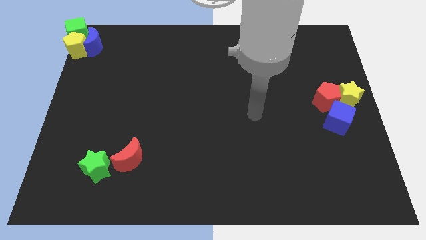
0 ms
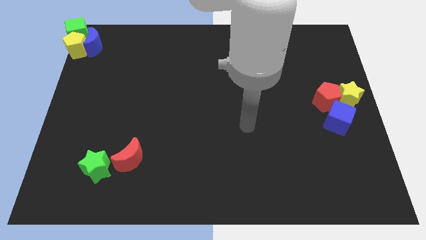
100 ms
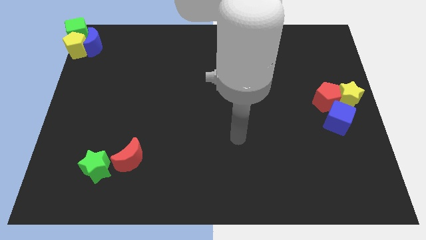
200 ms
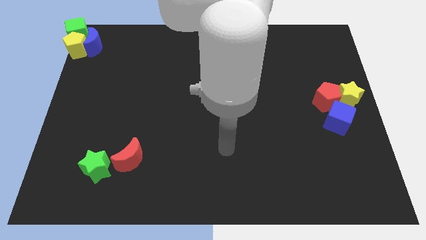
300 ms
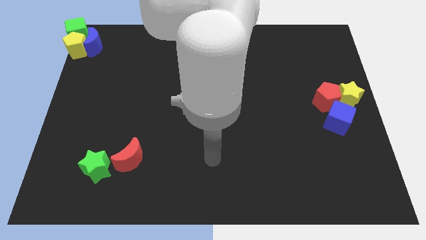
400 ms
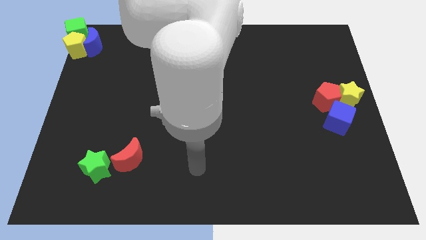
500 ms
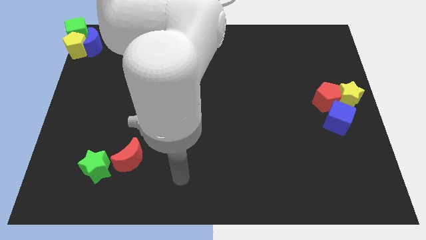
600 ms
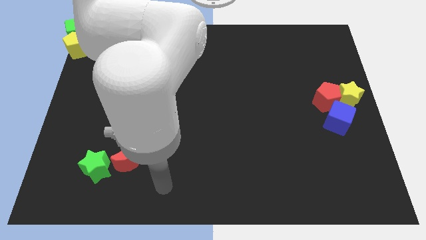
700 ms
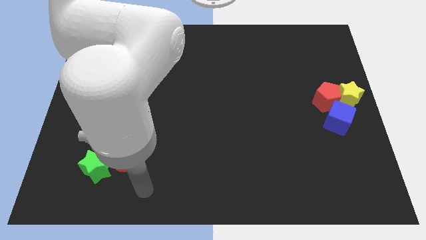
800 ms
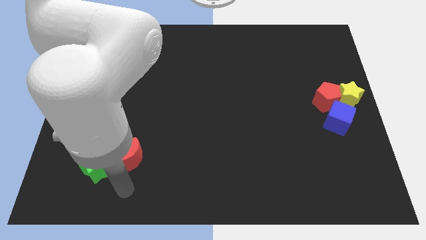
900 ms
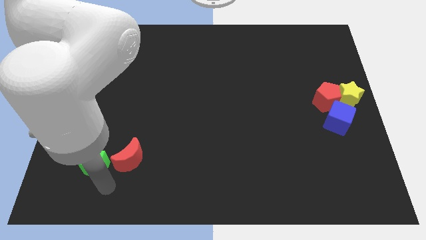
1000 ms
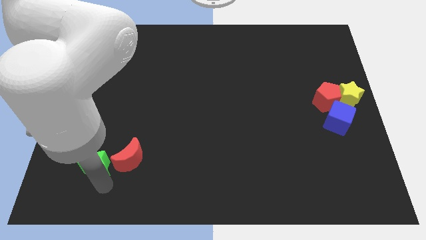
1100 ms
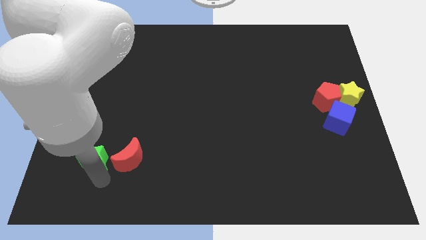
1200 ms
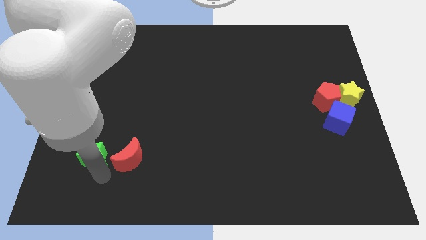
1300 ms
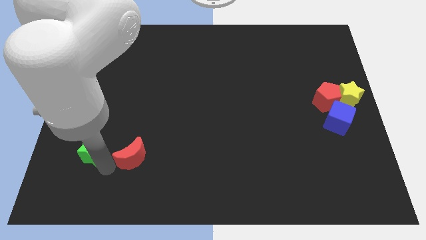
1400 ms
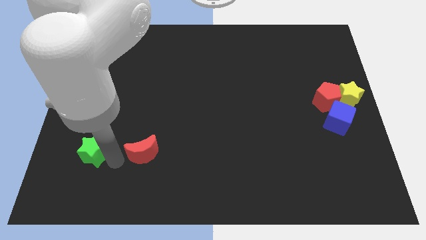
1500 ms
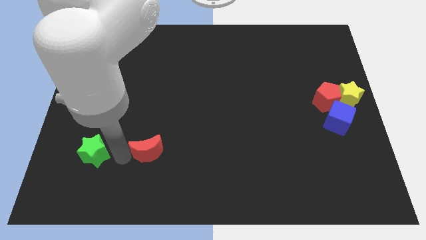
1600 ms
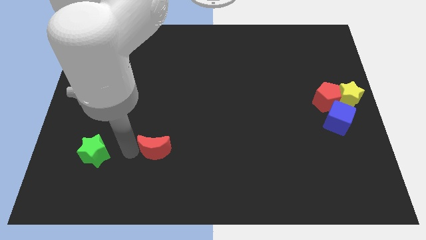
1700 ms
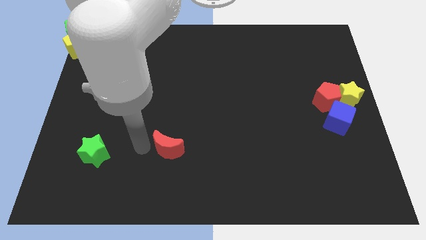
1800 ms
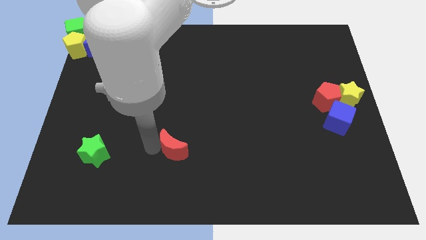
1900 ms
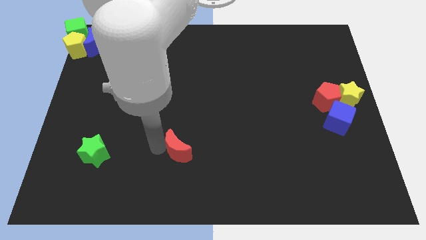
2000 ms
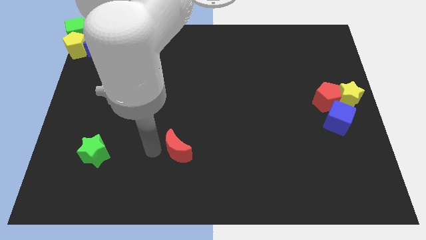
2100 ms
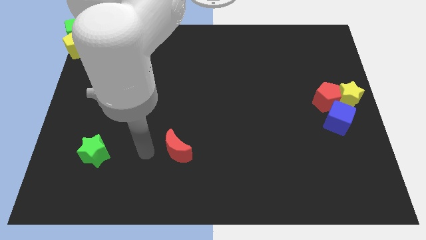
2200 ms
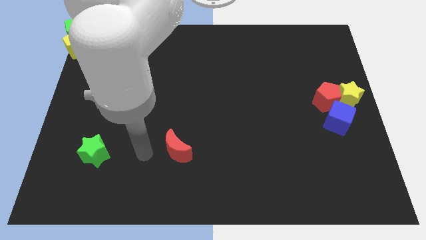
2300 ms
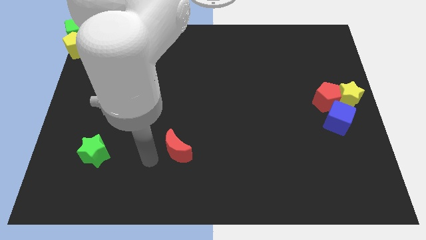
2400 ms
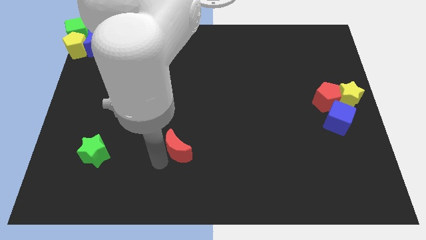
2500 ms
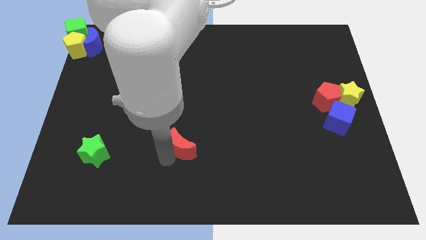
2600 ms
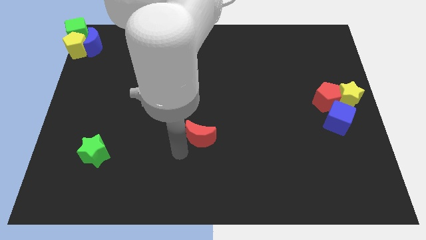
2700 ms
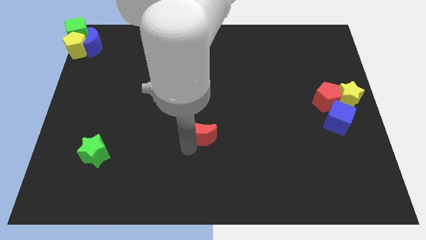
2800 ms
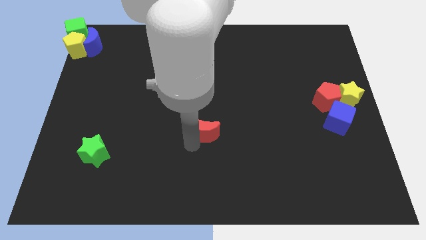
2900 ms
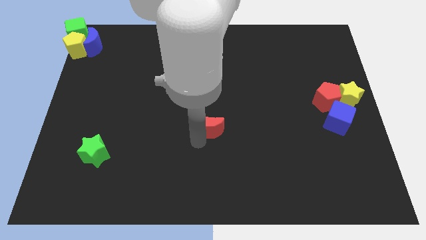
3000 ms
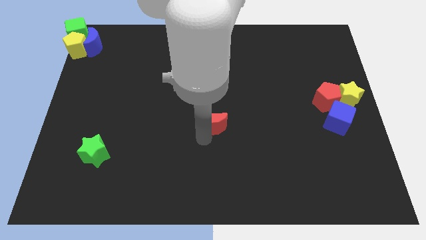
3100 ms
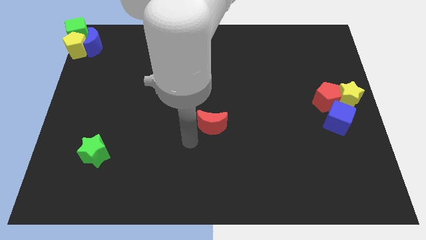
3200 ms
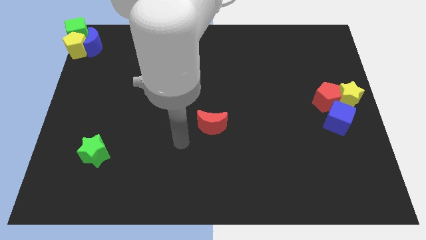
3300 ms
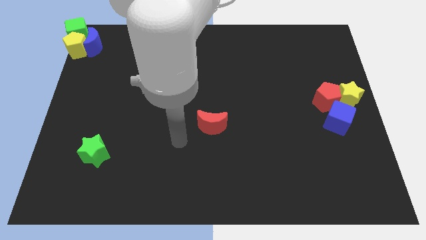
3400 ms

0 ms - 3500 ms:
push red crescent slightly towards the top right side

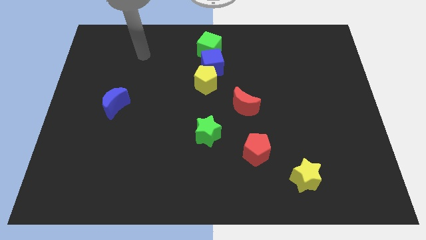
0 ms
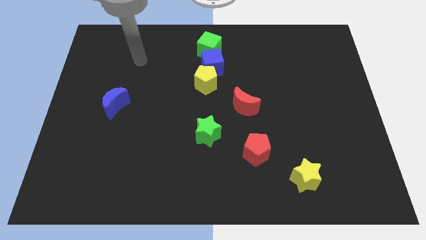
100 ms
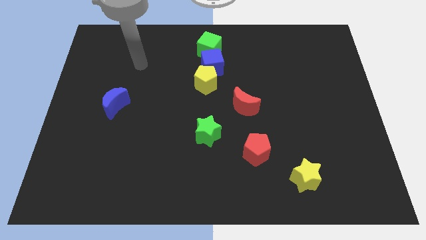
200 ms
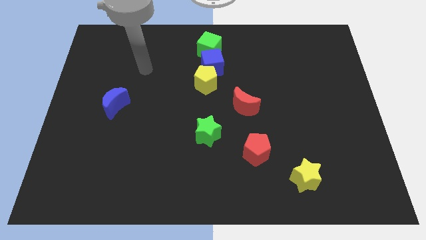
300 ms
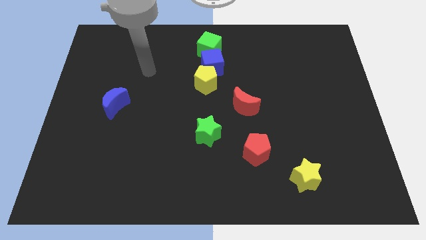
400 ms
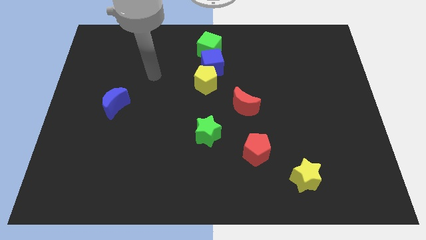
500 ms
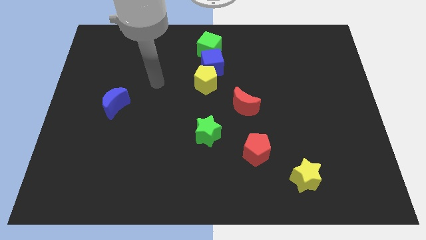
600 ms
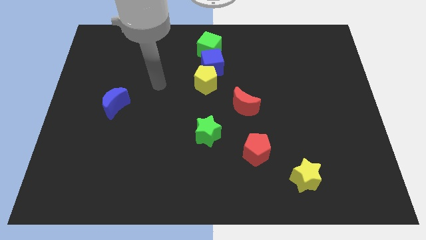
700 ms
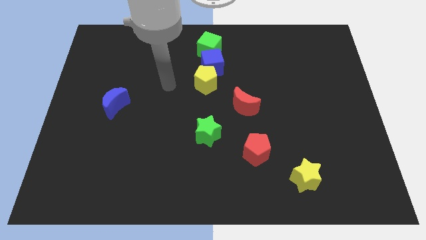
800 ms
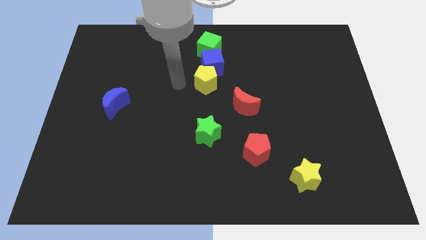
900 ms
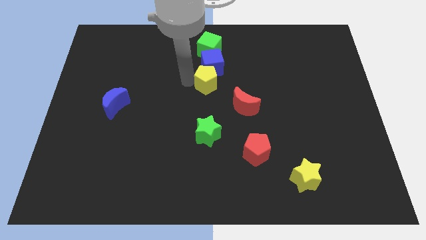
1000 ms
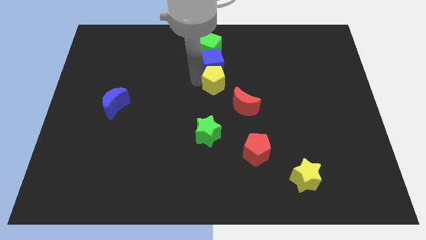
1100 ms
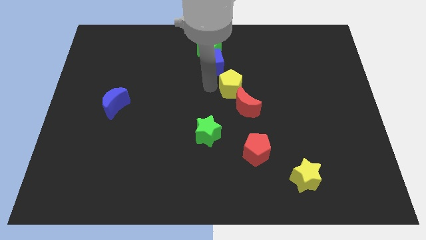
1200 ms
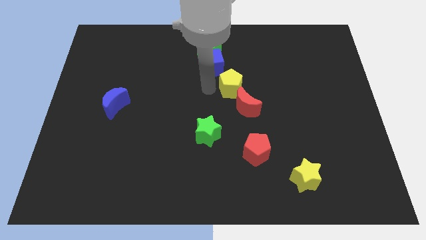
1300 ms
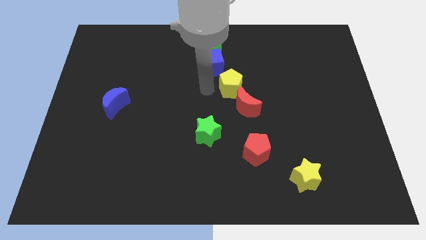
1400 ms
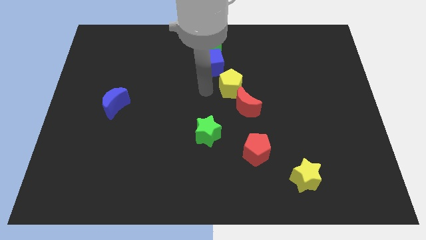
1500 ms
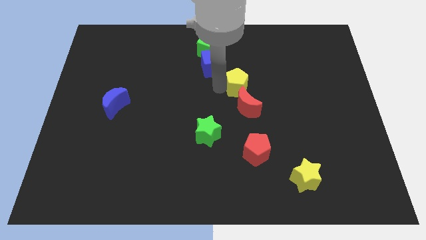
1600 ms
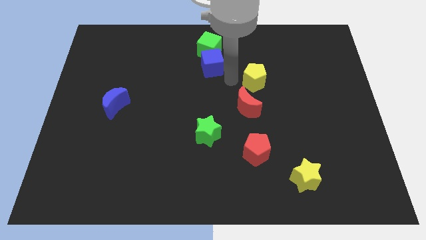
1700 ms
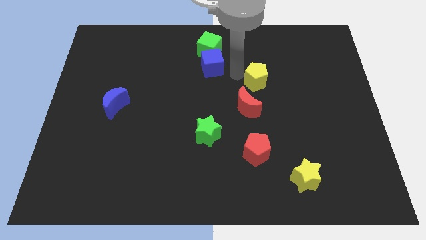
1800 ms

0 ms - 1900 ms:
separate the yellow pentagon towards right side

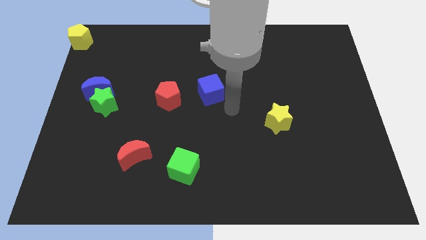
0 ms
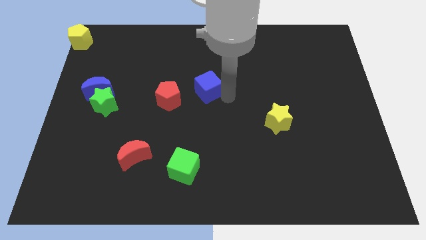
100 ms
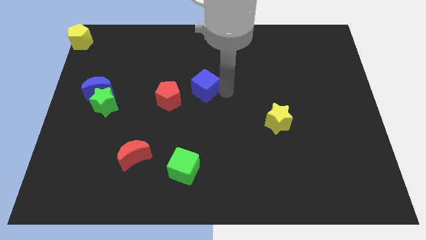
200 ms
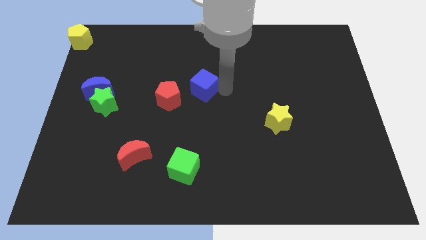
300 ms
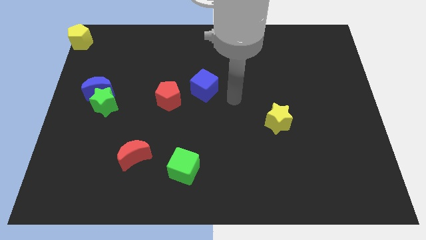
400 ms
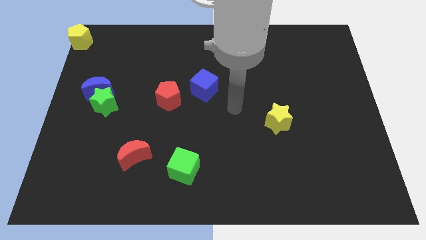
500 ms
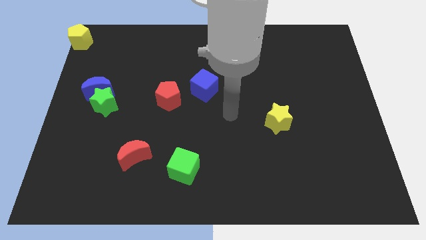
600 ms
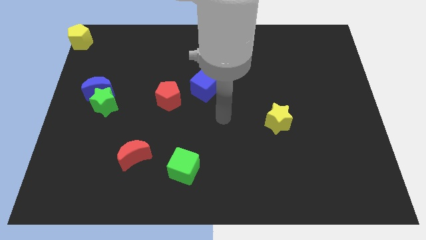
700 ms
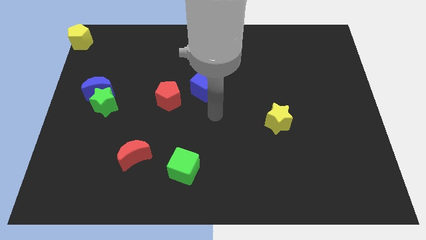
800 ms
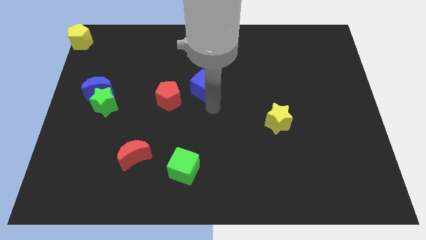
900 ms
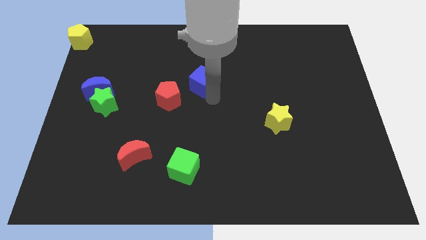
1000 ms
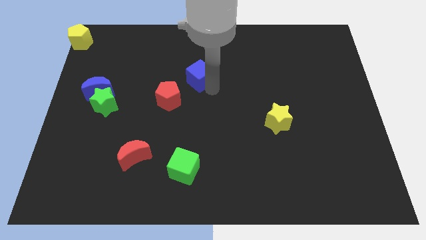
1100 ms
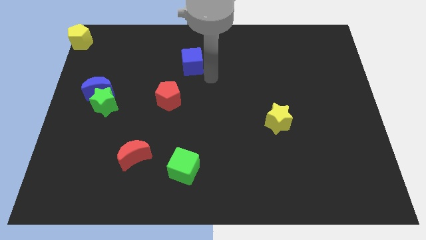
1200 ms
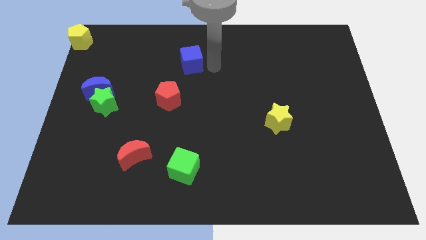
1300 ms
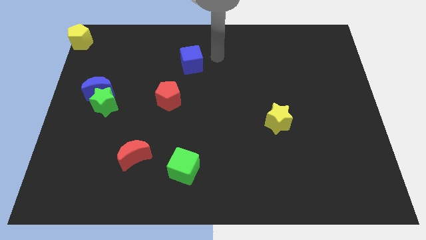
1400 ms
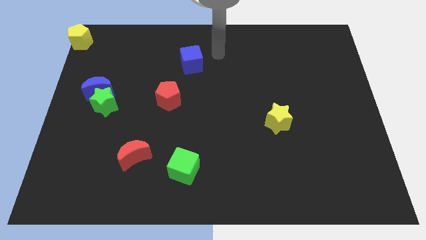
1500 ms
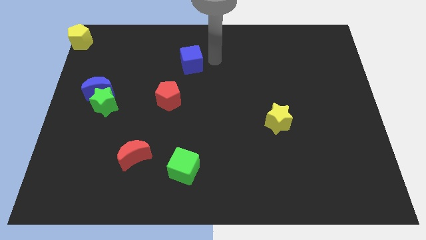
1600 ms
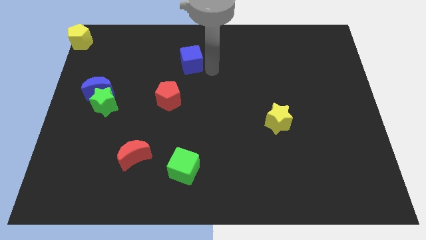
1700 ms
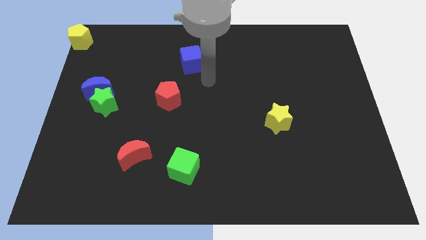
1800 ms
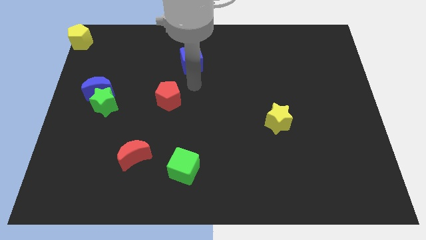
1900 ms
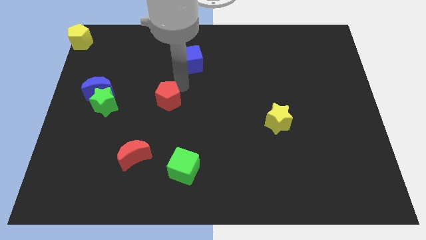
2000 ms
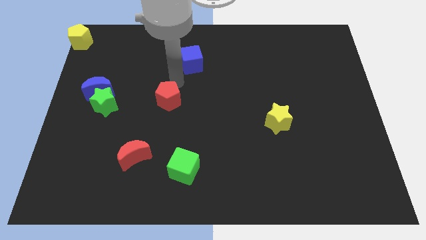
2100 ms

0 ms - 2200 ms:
push the blue cube to the top right of the red pentagon

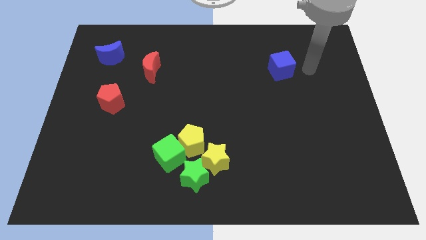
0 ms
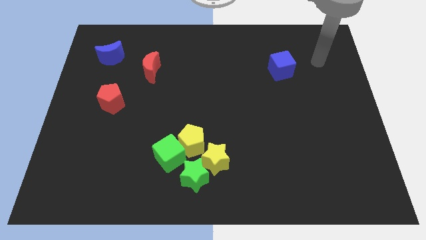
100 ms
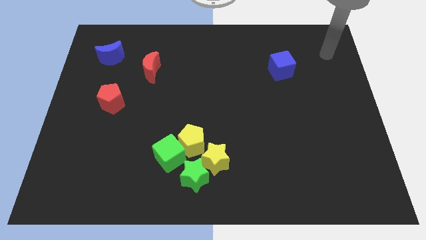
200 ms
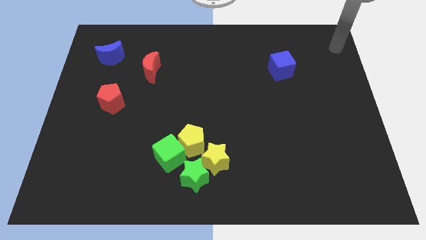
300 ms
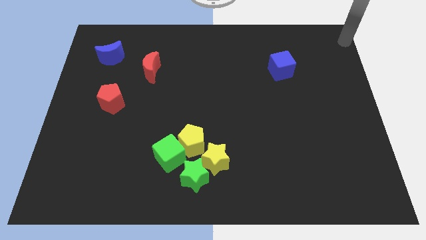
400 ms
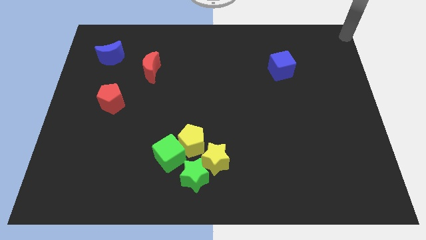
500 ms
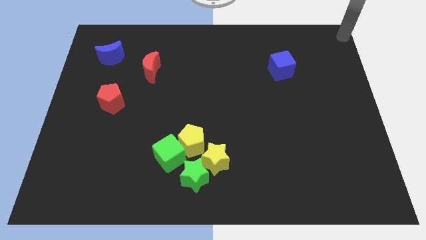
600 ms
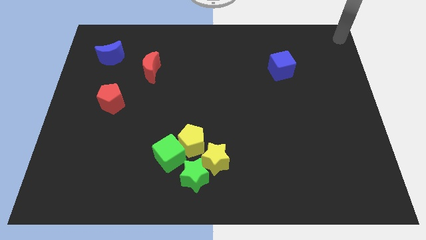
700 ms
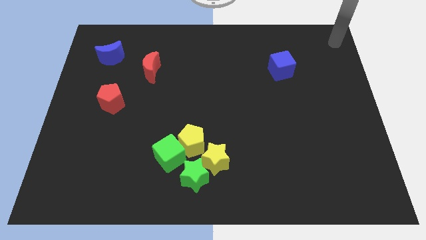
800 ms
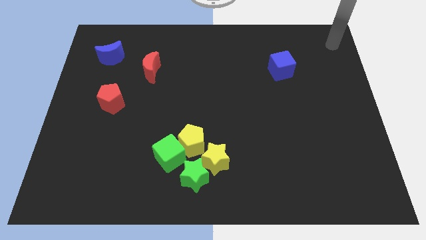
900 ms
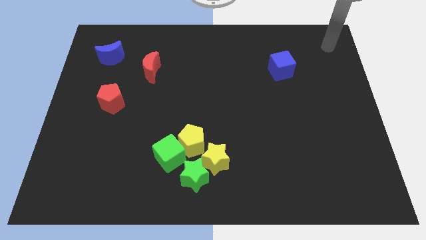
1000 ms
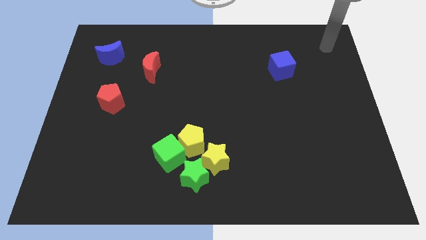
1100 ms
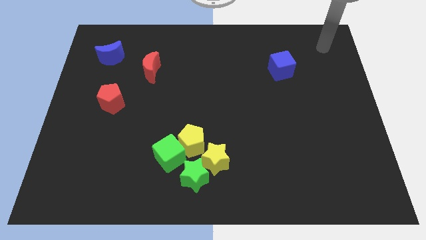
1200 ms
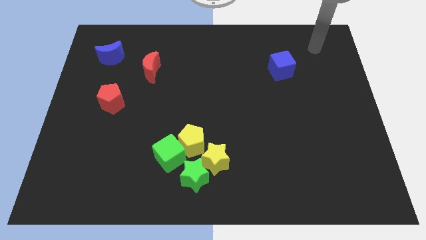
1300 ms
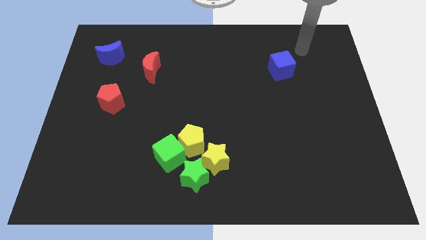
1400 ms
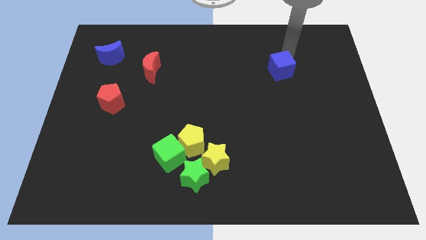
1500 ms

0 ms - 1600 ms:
point your hand at the top right side of the blue cube
